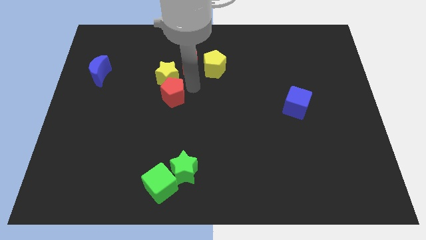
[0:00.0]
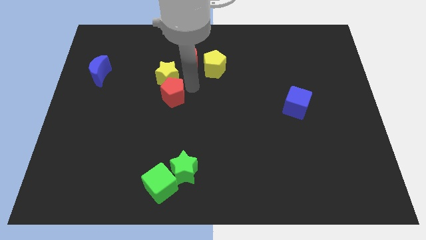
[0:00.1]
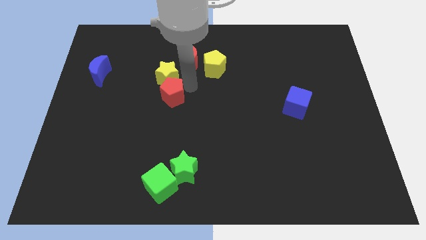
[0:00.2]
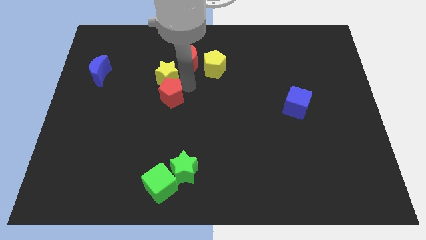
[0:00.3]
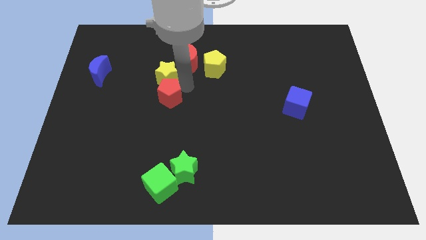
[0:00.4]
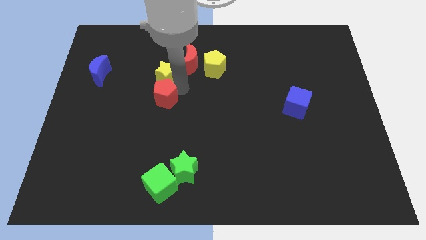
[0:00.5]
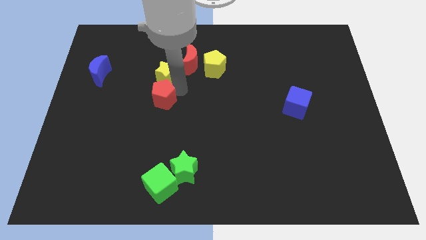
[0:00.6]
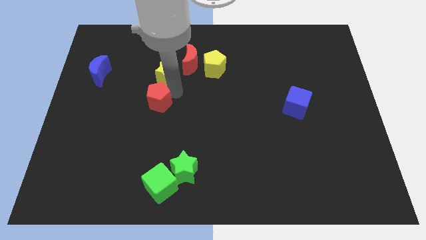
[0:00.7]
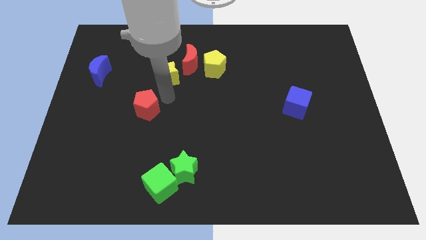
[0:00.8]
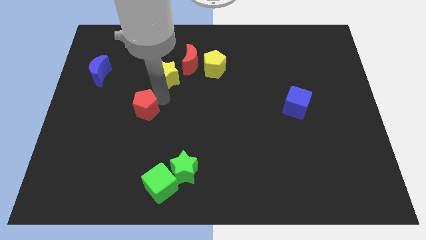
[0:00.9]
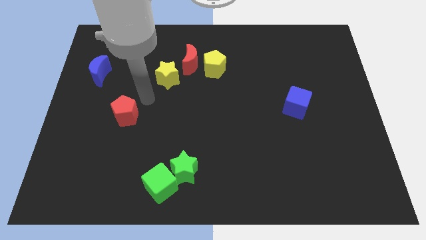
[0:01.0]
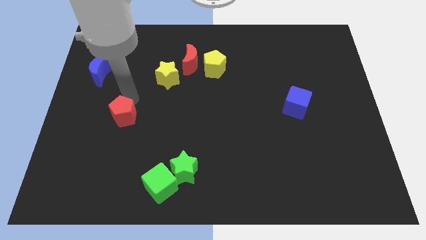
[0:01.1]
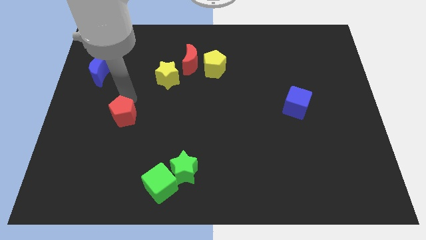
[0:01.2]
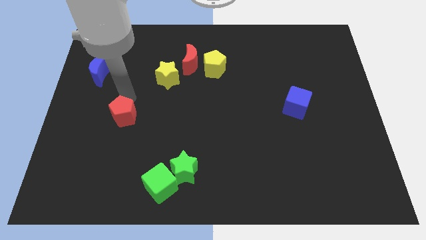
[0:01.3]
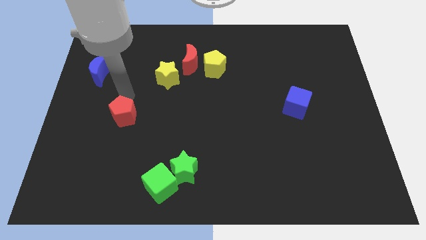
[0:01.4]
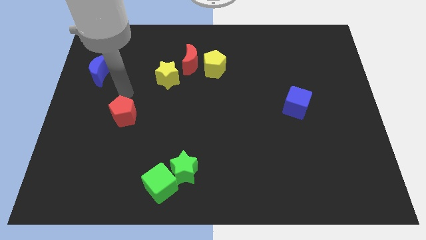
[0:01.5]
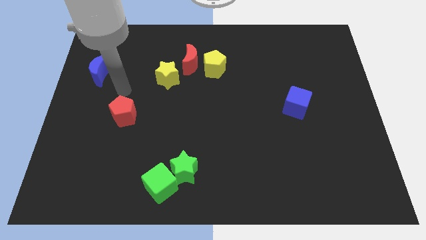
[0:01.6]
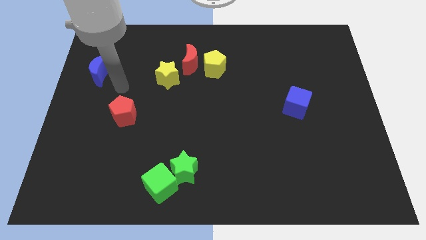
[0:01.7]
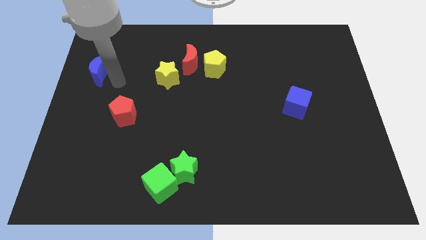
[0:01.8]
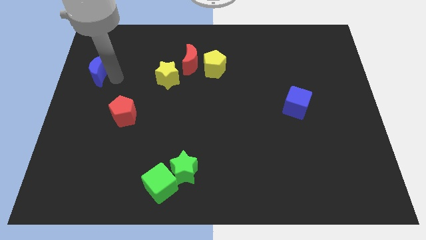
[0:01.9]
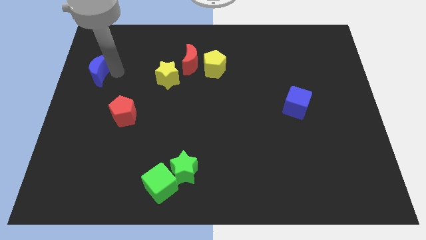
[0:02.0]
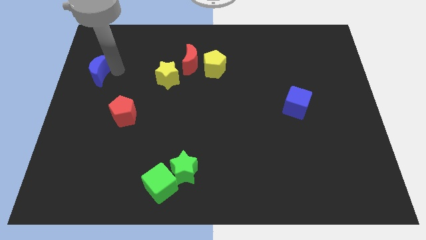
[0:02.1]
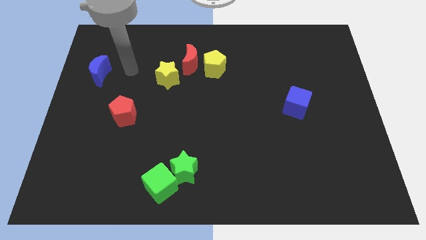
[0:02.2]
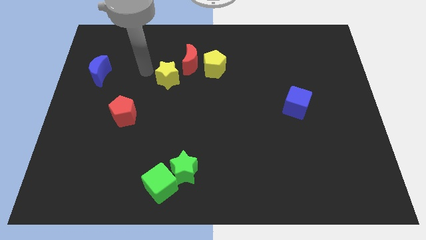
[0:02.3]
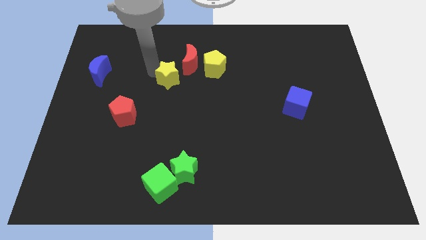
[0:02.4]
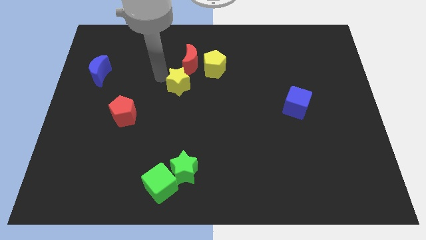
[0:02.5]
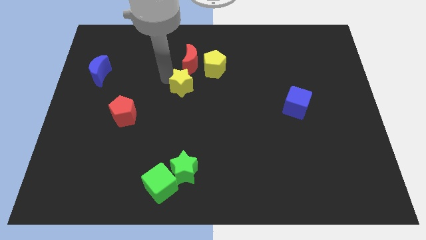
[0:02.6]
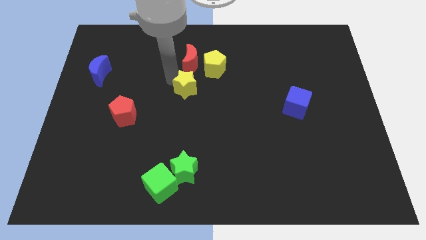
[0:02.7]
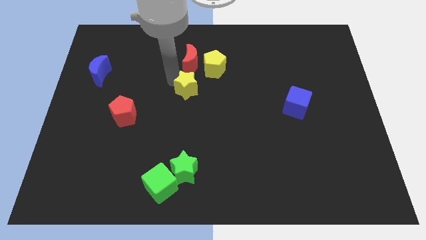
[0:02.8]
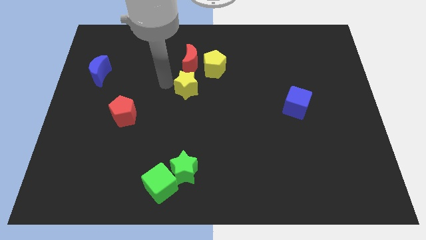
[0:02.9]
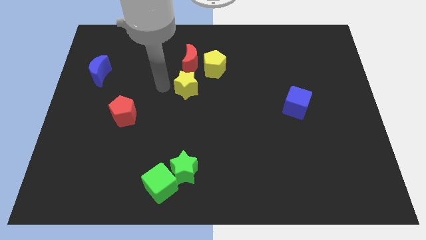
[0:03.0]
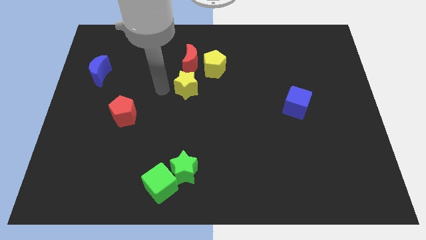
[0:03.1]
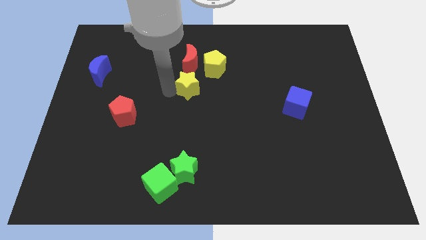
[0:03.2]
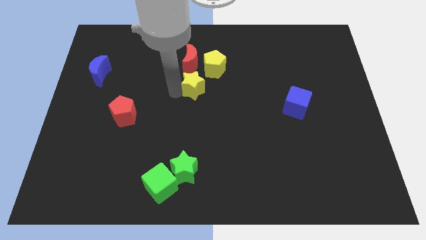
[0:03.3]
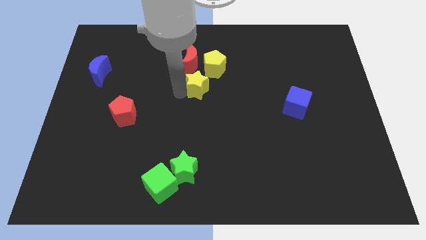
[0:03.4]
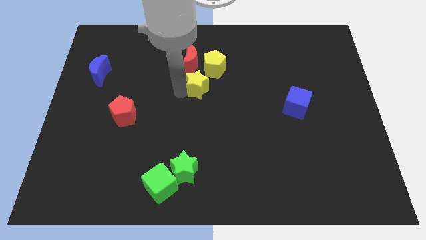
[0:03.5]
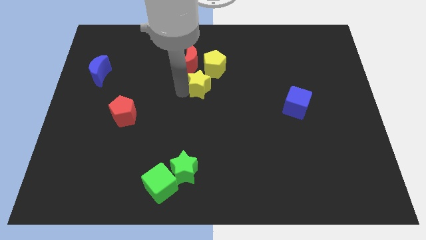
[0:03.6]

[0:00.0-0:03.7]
move the red pentagon below the blue crescent

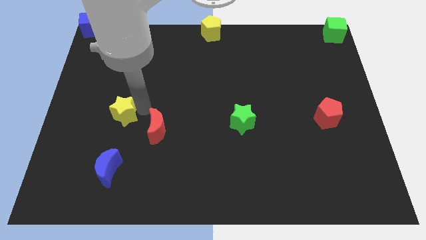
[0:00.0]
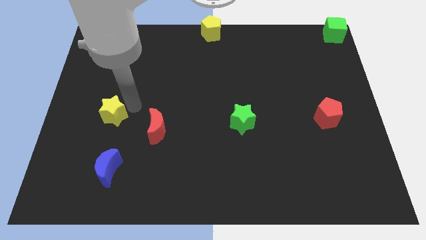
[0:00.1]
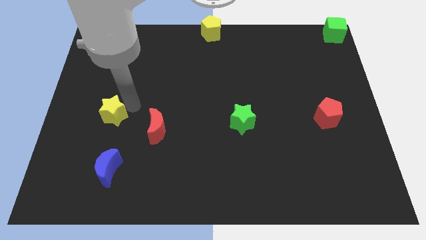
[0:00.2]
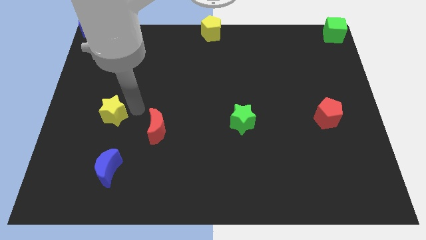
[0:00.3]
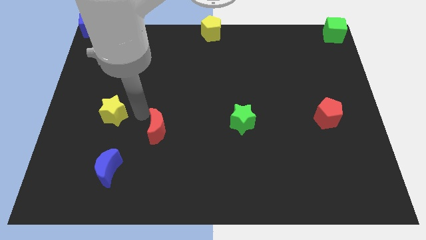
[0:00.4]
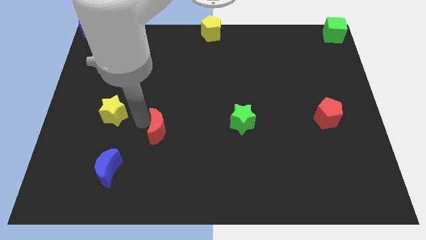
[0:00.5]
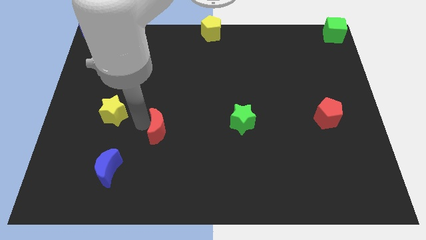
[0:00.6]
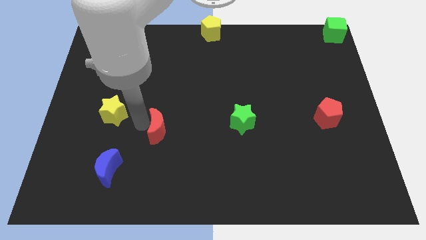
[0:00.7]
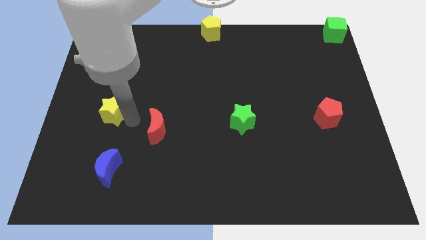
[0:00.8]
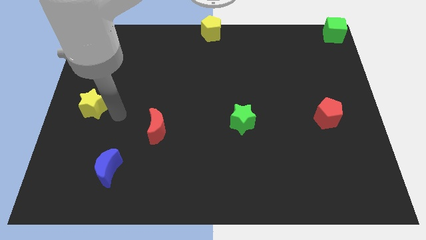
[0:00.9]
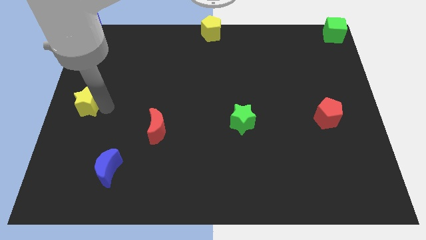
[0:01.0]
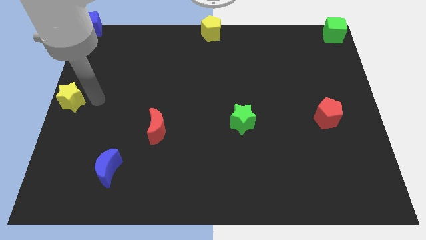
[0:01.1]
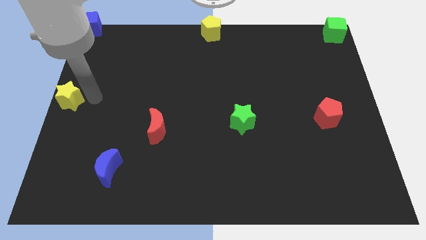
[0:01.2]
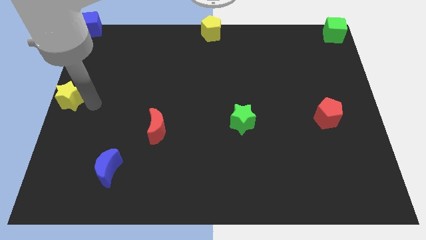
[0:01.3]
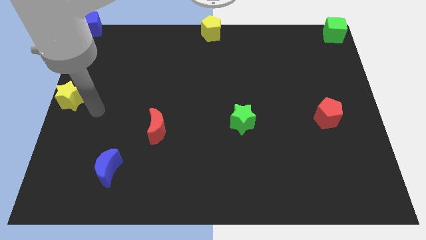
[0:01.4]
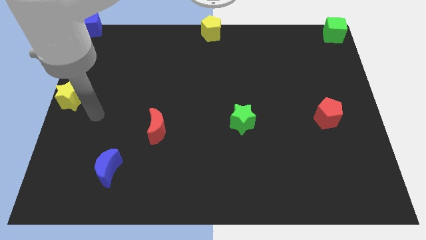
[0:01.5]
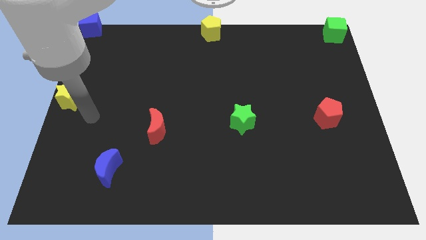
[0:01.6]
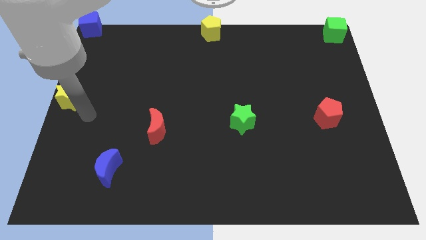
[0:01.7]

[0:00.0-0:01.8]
push the yellow star to the left center of the board

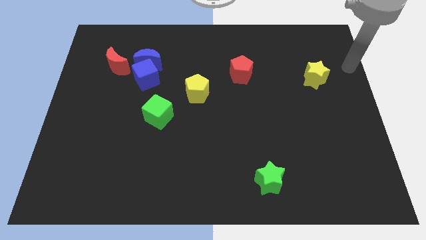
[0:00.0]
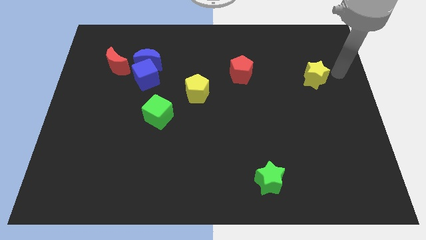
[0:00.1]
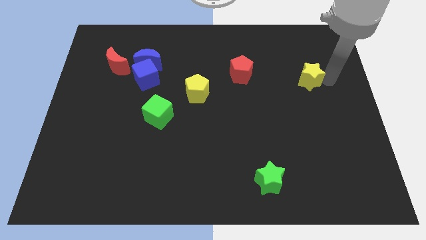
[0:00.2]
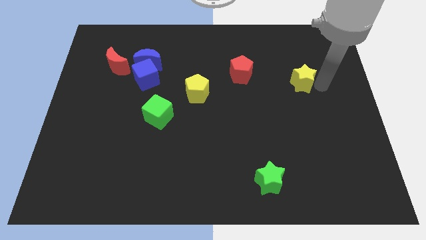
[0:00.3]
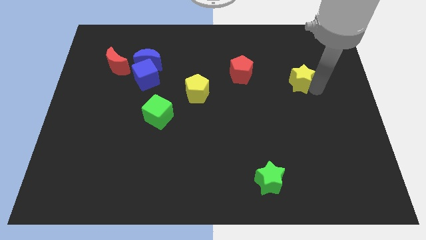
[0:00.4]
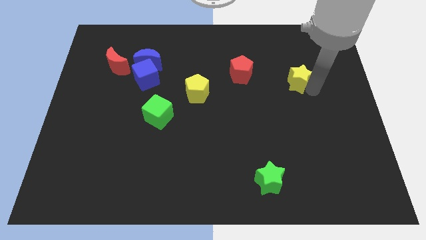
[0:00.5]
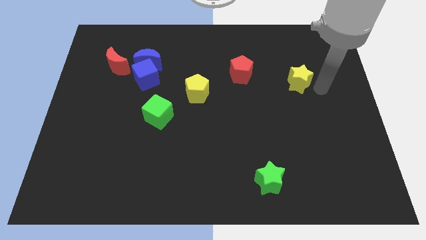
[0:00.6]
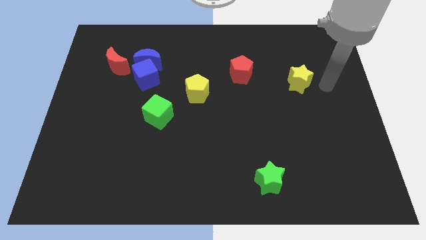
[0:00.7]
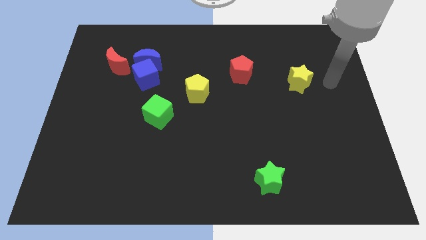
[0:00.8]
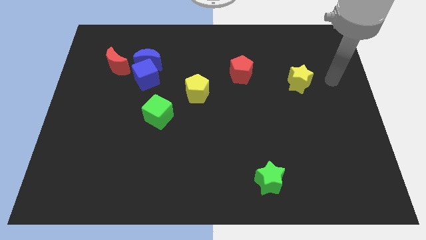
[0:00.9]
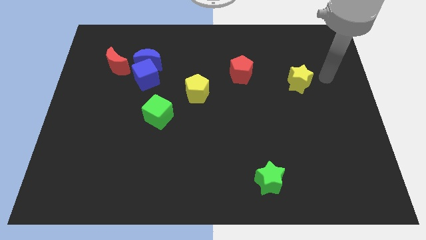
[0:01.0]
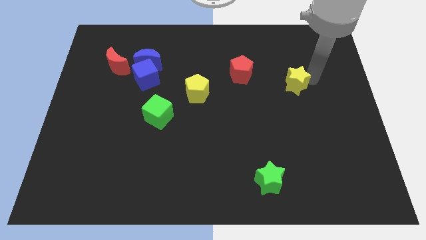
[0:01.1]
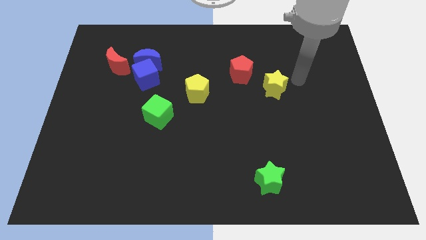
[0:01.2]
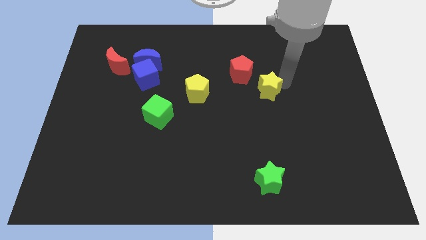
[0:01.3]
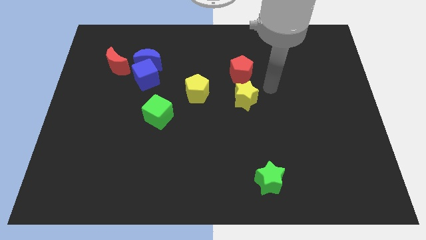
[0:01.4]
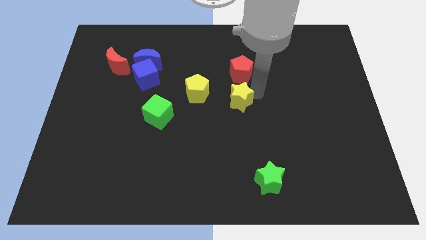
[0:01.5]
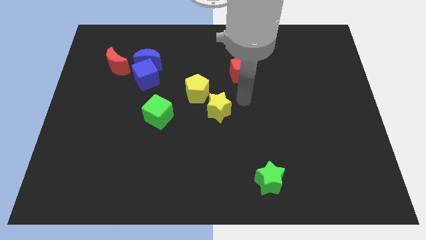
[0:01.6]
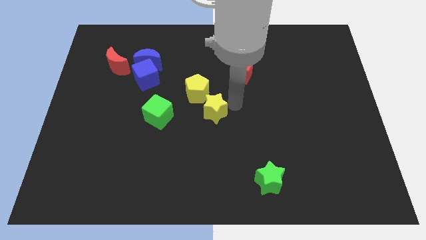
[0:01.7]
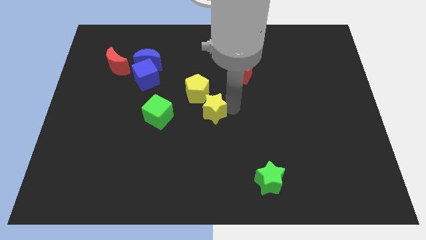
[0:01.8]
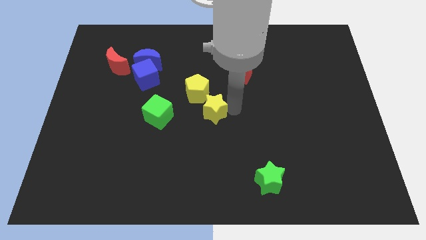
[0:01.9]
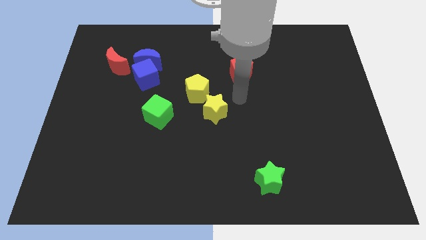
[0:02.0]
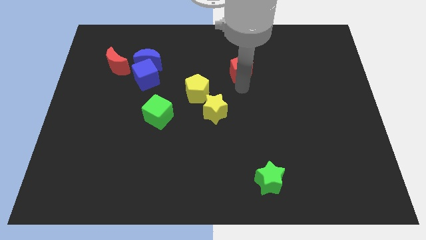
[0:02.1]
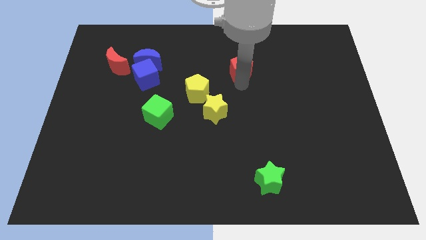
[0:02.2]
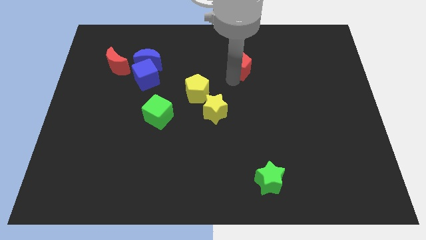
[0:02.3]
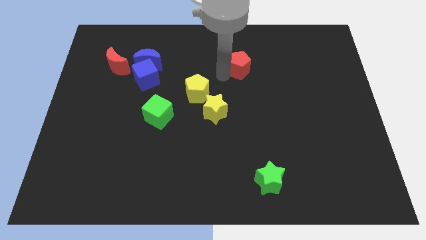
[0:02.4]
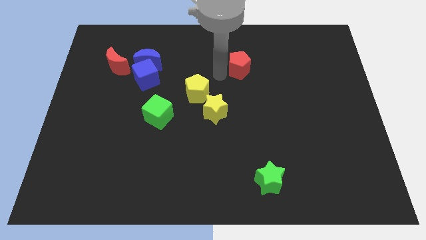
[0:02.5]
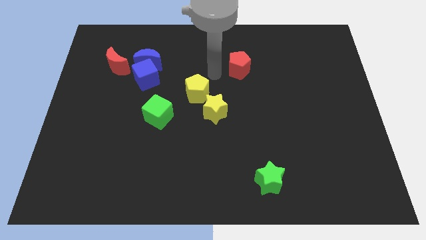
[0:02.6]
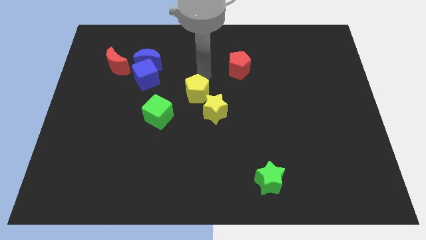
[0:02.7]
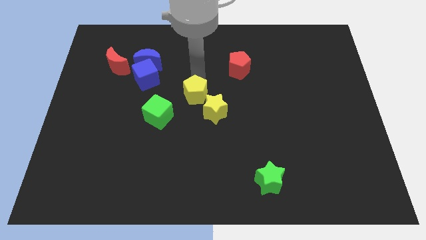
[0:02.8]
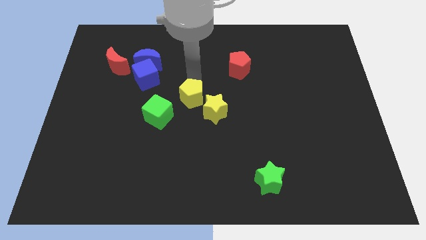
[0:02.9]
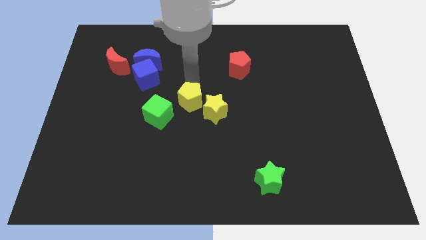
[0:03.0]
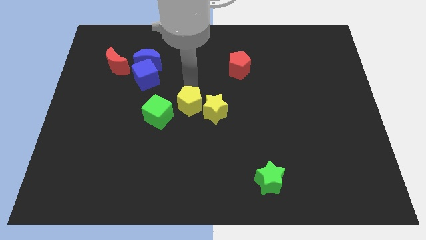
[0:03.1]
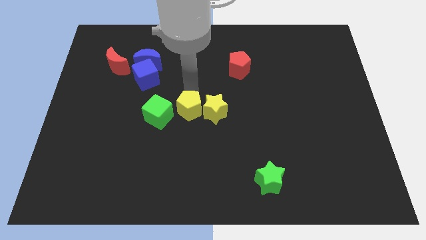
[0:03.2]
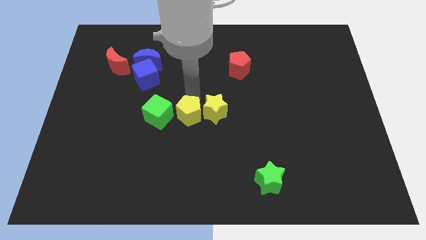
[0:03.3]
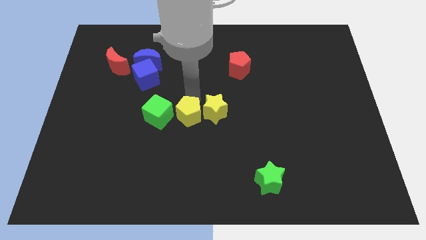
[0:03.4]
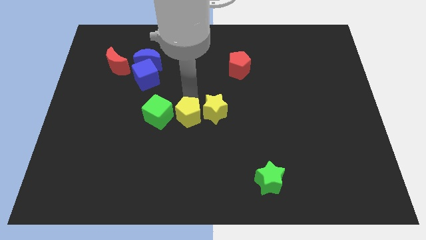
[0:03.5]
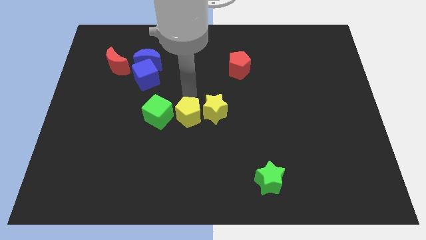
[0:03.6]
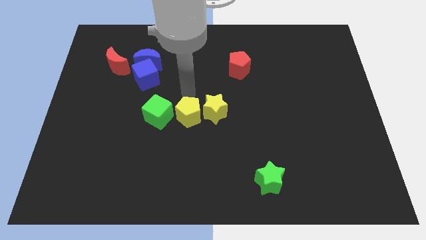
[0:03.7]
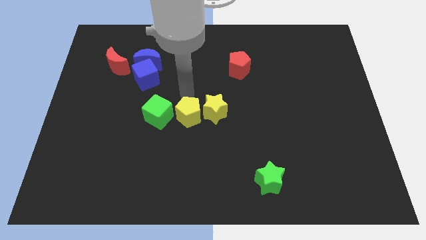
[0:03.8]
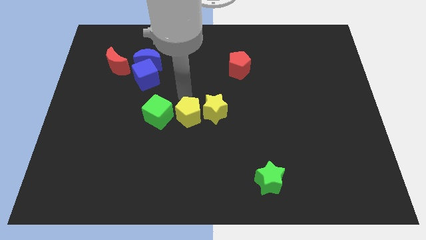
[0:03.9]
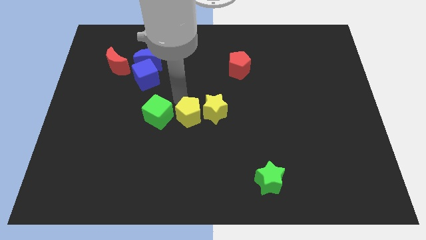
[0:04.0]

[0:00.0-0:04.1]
push the yellow pentagon between the yellow star and green cube
